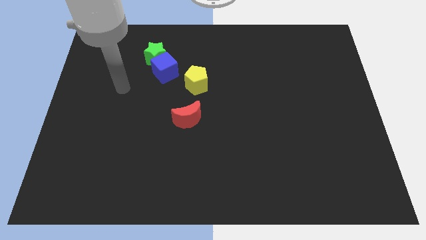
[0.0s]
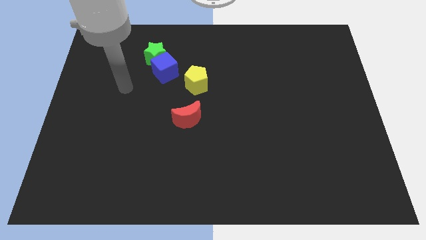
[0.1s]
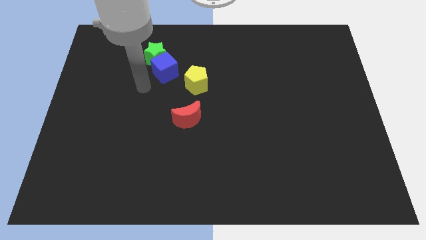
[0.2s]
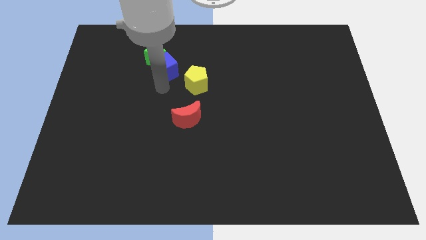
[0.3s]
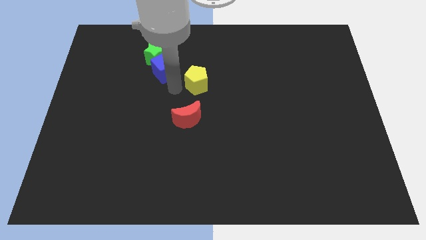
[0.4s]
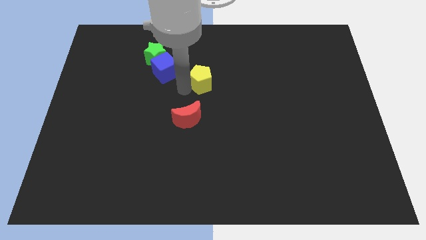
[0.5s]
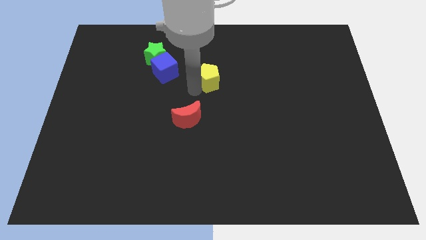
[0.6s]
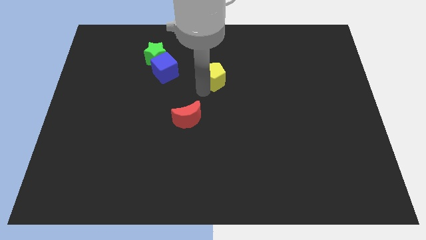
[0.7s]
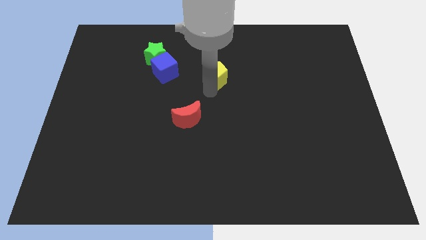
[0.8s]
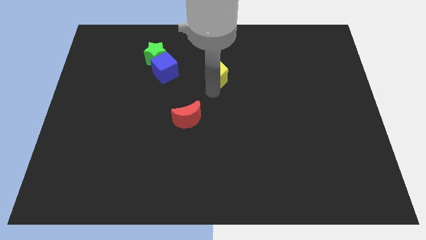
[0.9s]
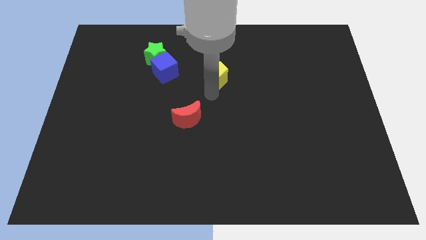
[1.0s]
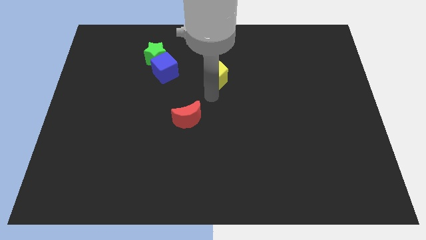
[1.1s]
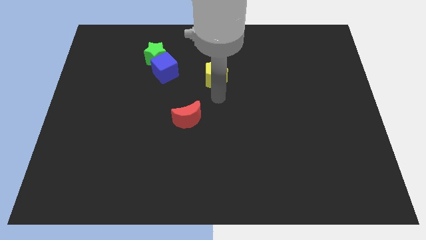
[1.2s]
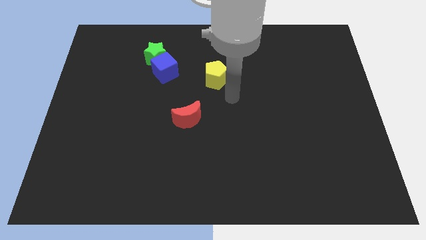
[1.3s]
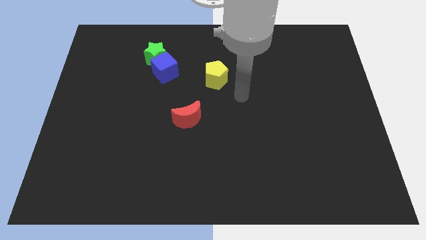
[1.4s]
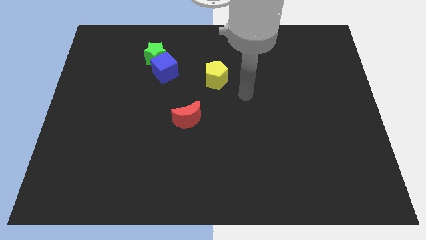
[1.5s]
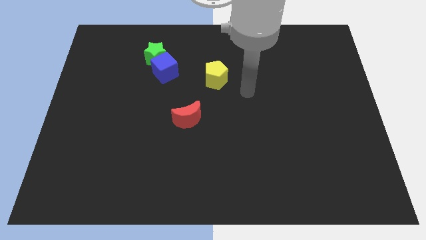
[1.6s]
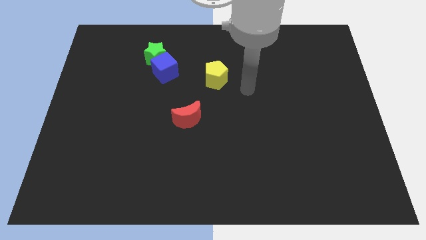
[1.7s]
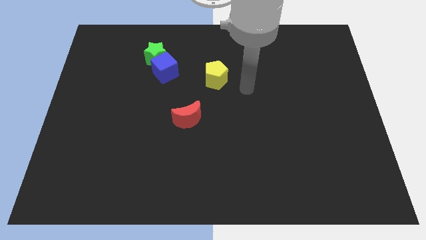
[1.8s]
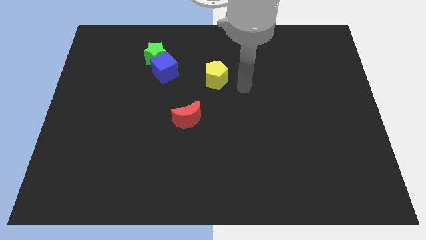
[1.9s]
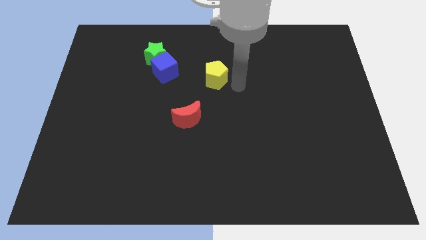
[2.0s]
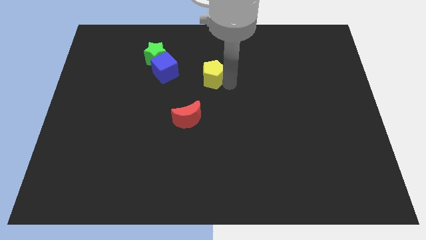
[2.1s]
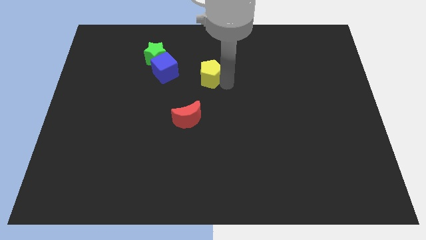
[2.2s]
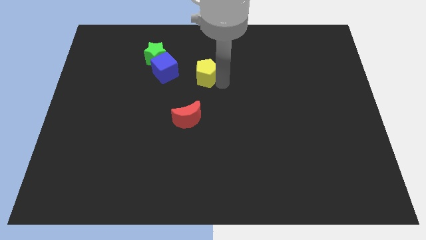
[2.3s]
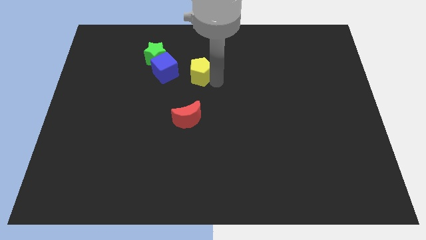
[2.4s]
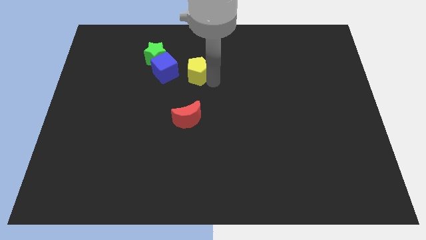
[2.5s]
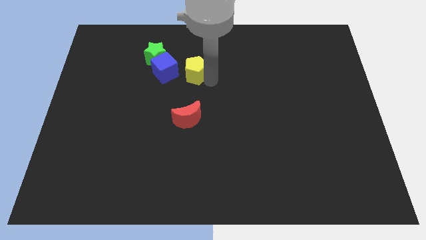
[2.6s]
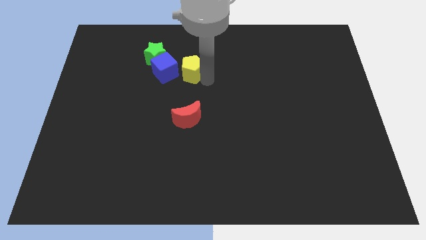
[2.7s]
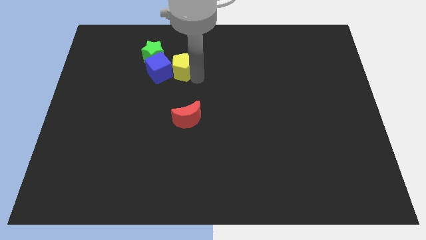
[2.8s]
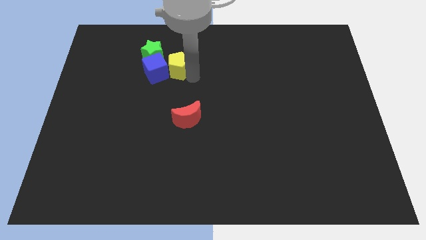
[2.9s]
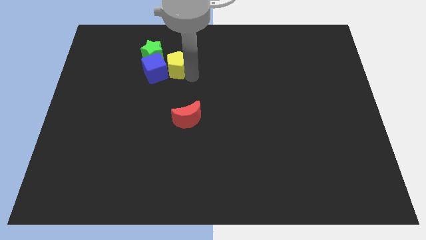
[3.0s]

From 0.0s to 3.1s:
push the yellow block next to the blue block

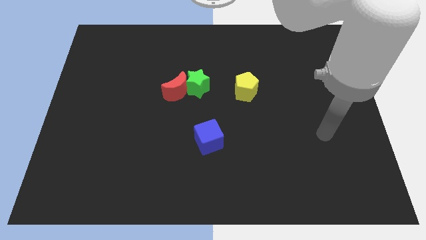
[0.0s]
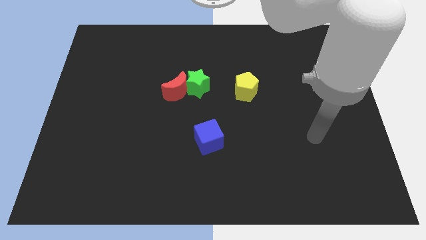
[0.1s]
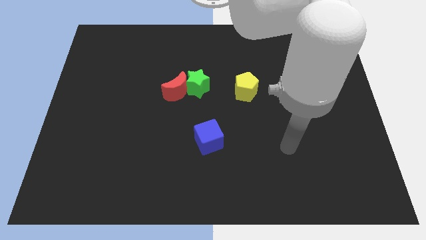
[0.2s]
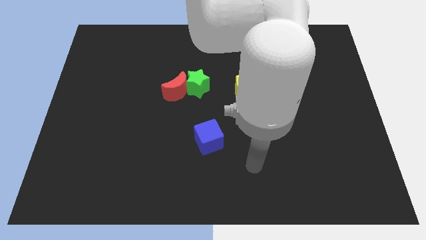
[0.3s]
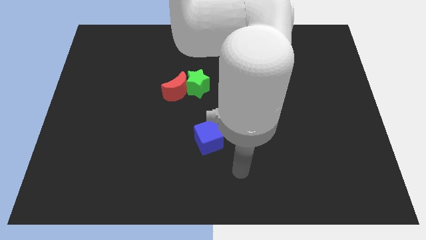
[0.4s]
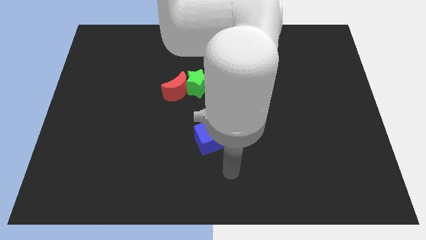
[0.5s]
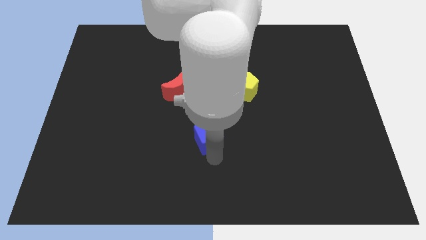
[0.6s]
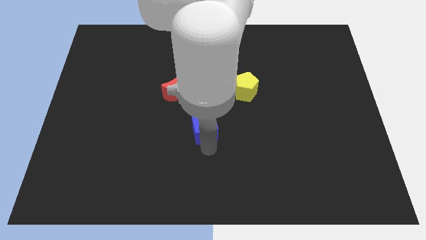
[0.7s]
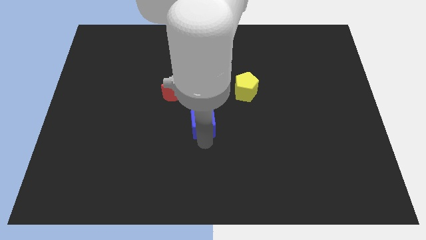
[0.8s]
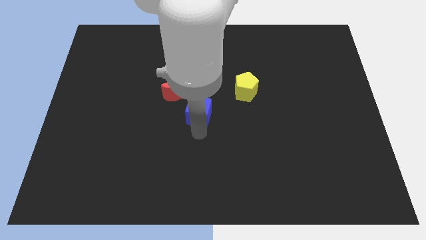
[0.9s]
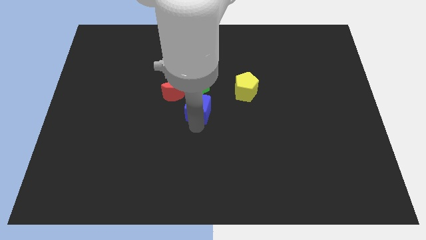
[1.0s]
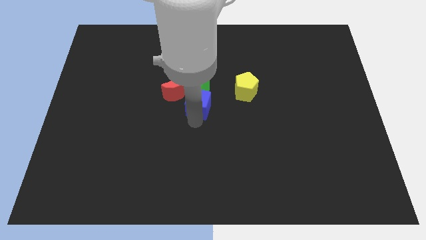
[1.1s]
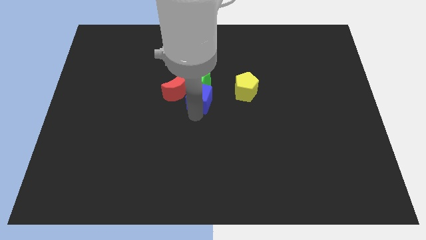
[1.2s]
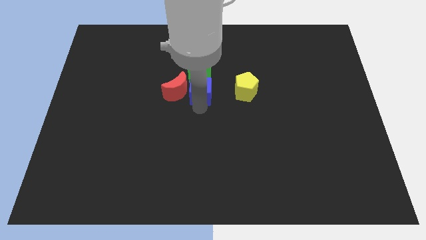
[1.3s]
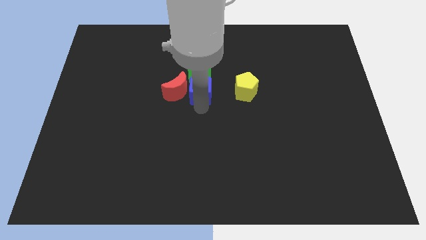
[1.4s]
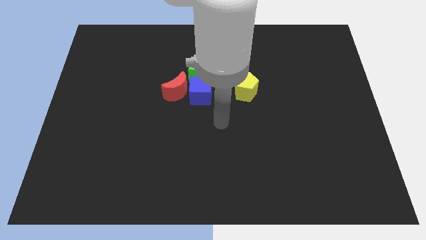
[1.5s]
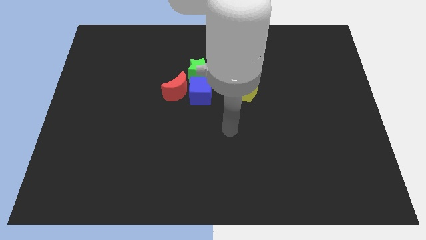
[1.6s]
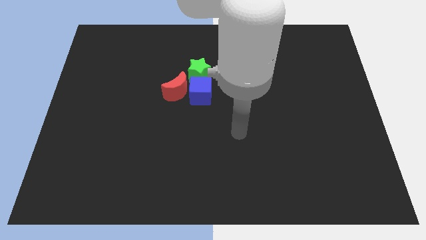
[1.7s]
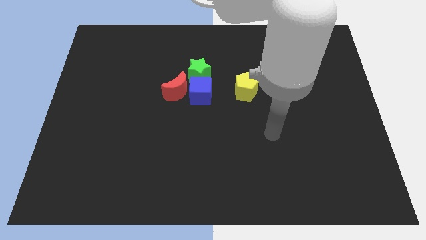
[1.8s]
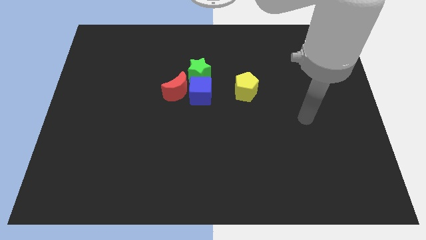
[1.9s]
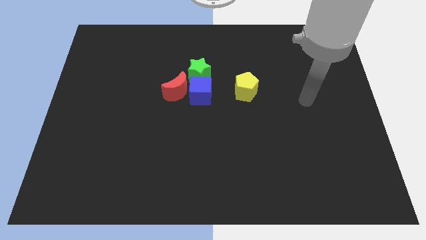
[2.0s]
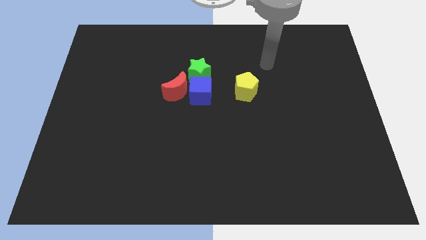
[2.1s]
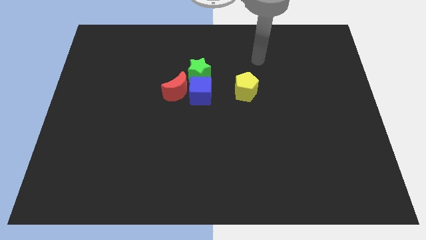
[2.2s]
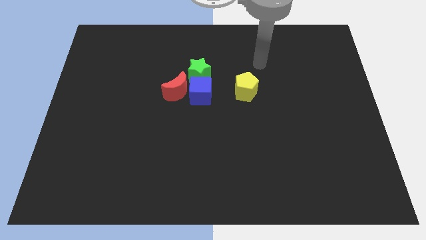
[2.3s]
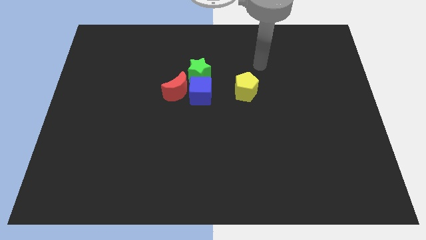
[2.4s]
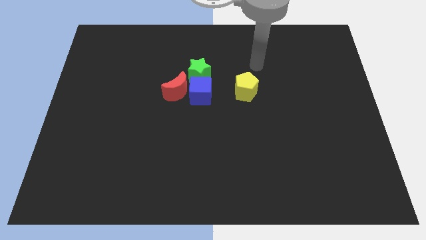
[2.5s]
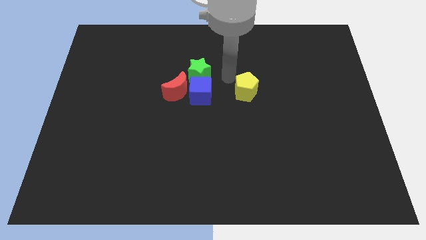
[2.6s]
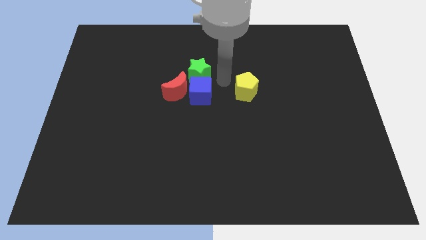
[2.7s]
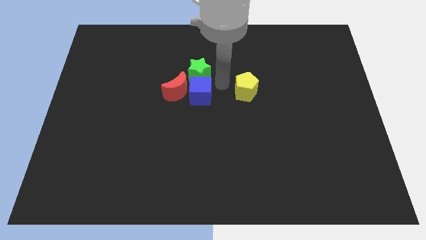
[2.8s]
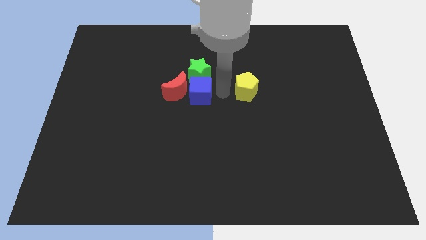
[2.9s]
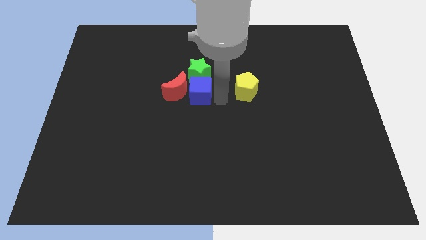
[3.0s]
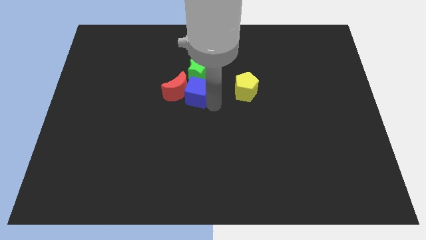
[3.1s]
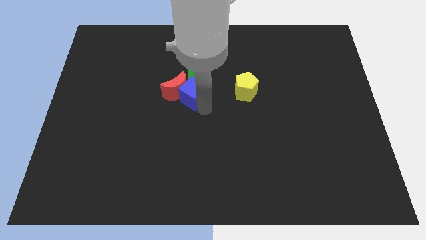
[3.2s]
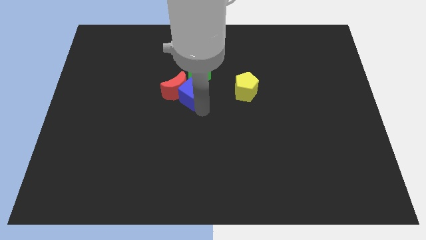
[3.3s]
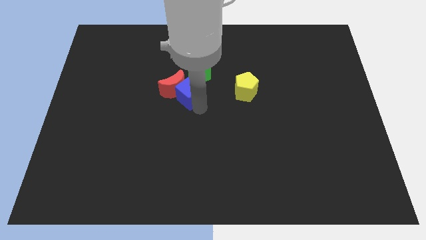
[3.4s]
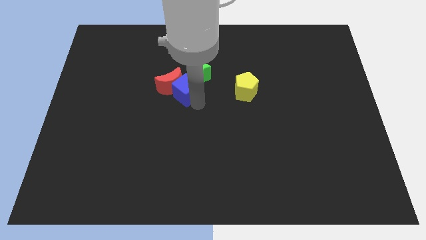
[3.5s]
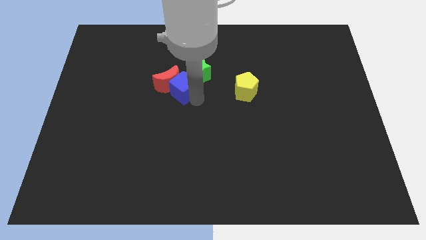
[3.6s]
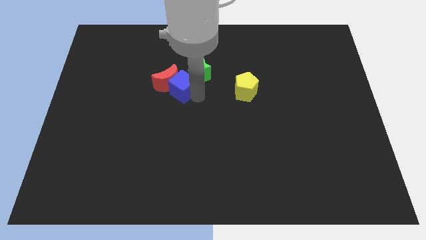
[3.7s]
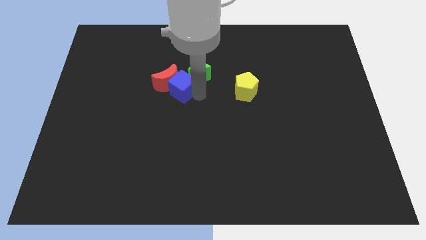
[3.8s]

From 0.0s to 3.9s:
slide the blue cube to the green star

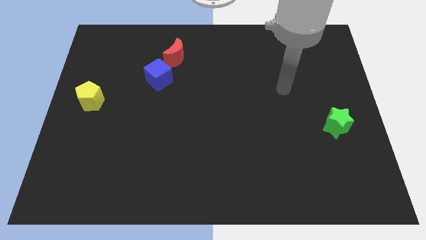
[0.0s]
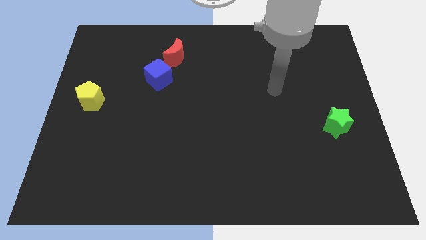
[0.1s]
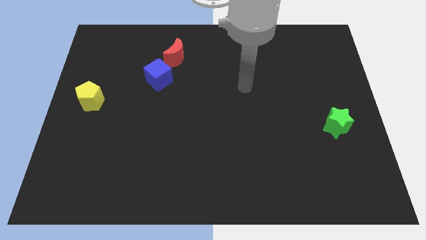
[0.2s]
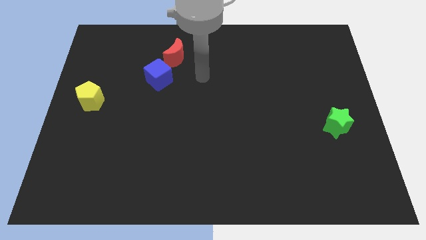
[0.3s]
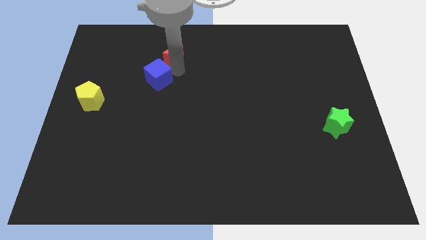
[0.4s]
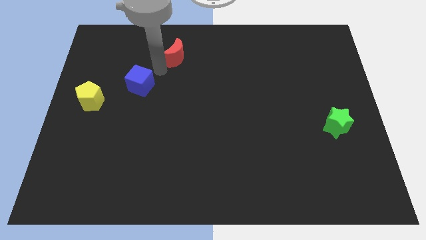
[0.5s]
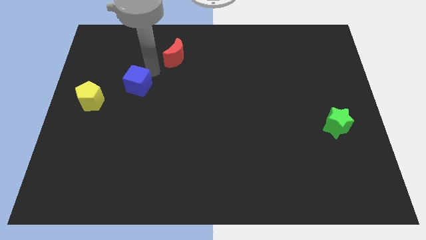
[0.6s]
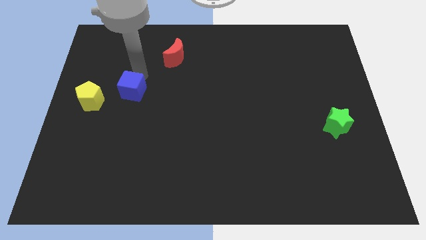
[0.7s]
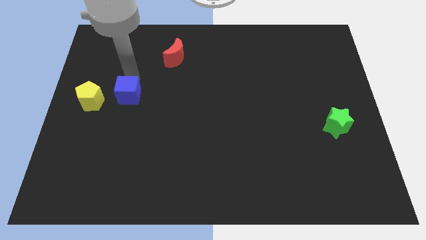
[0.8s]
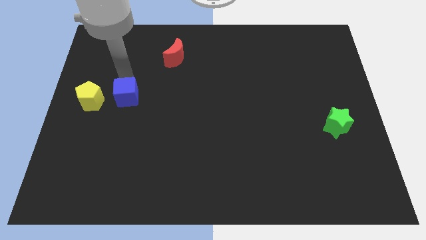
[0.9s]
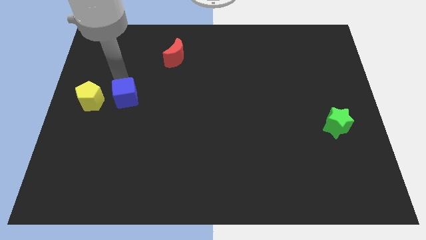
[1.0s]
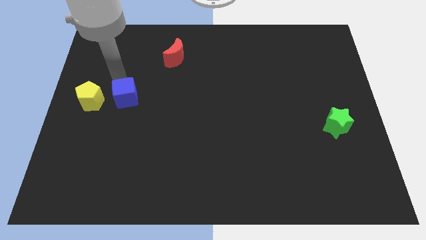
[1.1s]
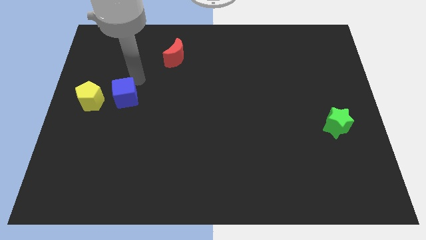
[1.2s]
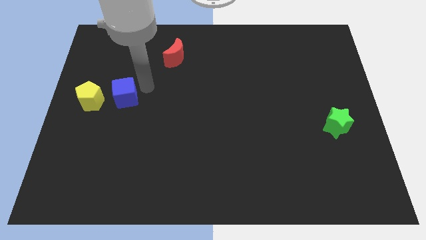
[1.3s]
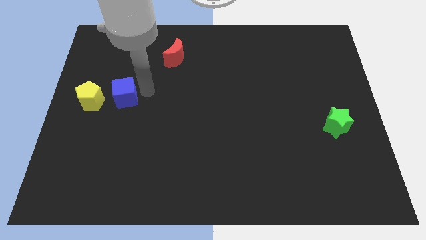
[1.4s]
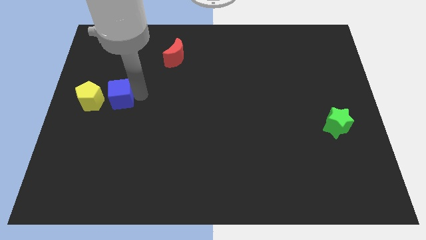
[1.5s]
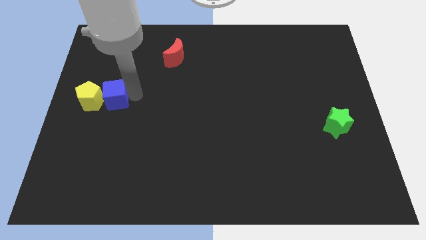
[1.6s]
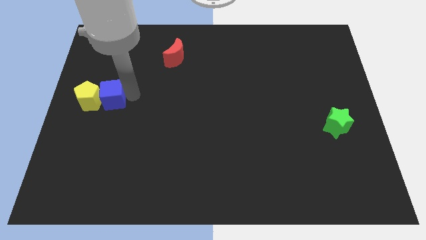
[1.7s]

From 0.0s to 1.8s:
slide the cube close to the yellow block
